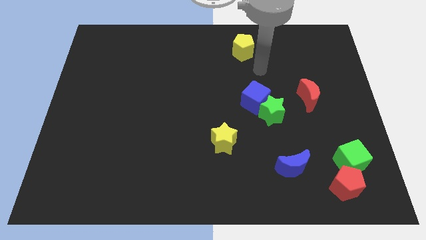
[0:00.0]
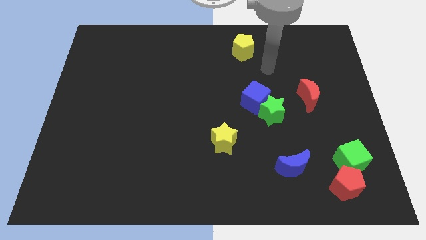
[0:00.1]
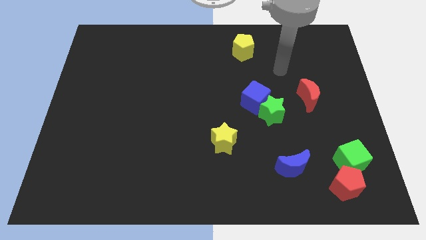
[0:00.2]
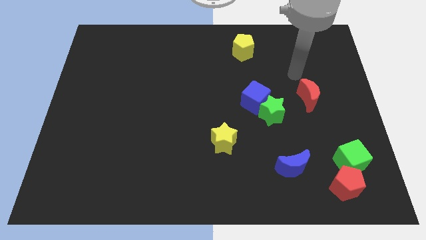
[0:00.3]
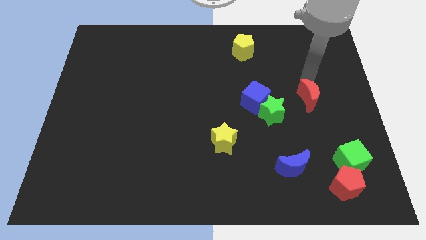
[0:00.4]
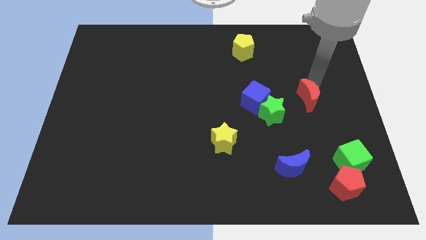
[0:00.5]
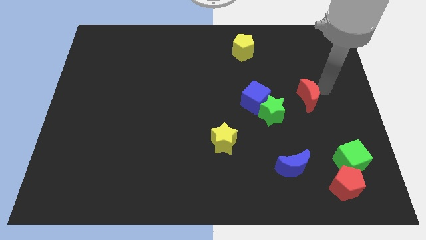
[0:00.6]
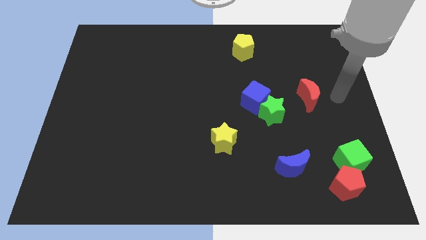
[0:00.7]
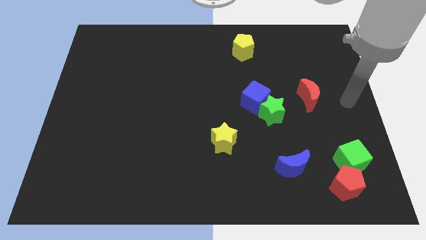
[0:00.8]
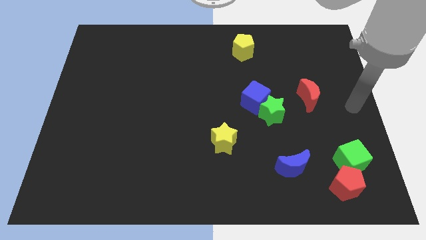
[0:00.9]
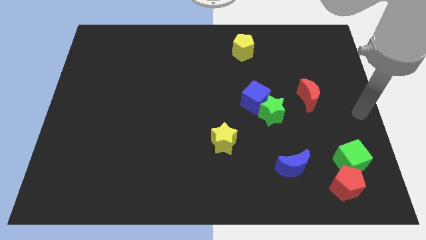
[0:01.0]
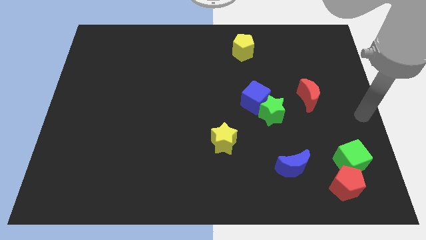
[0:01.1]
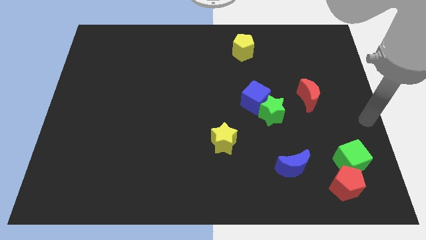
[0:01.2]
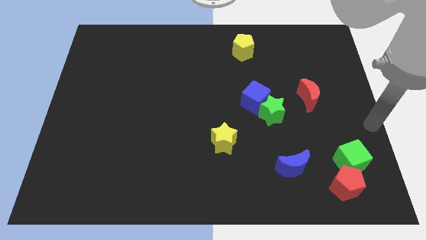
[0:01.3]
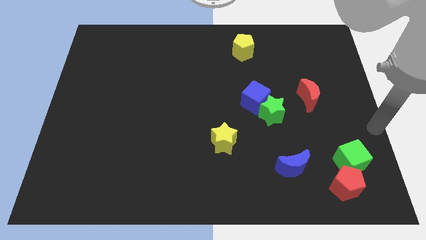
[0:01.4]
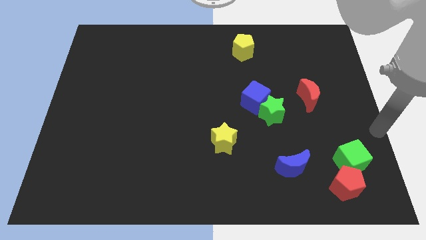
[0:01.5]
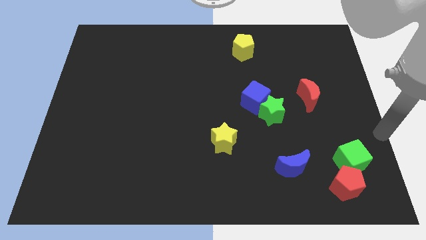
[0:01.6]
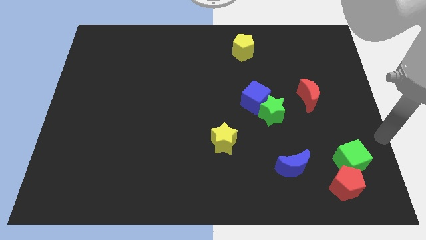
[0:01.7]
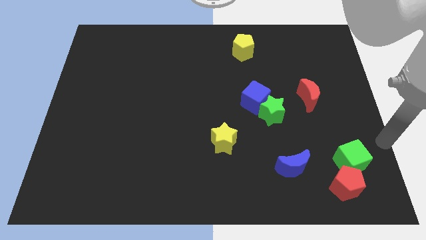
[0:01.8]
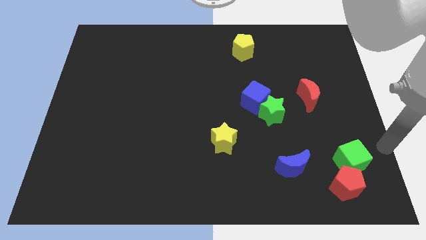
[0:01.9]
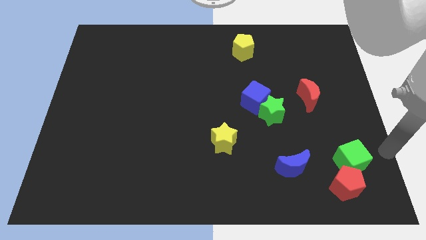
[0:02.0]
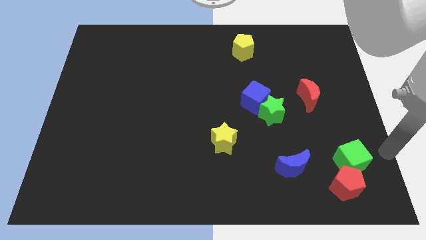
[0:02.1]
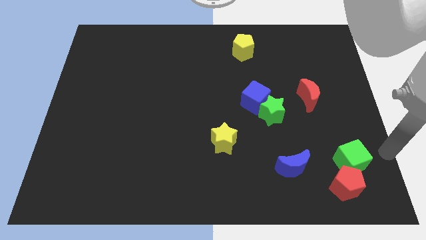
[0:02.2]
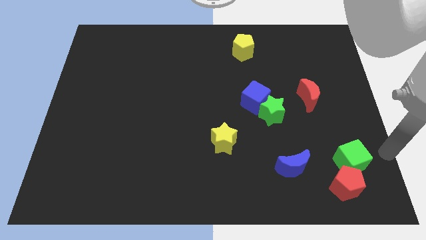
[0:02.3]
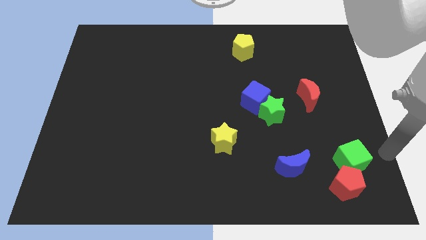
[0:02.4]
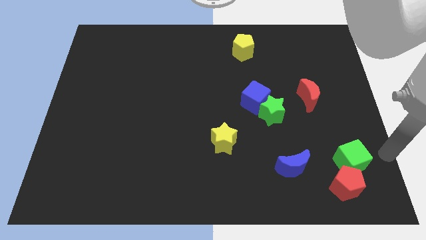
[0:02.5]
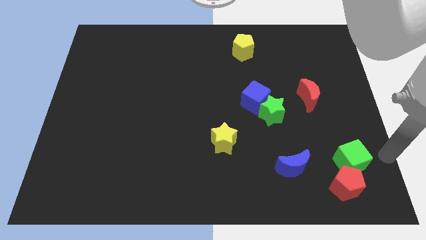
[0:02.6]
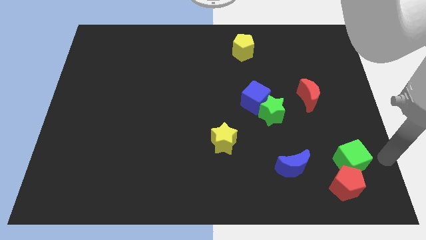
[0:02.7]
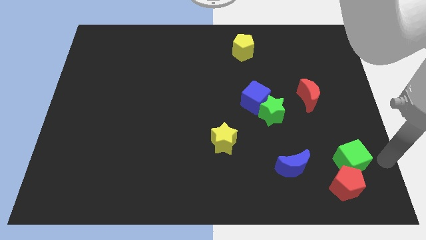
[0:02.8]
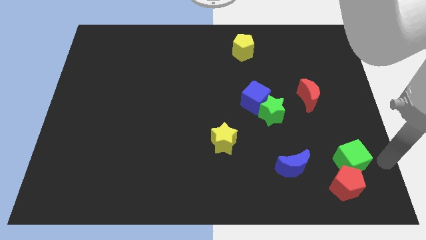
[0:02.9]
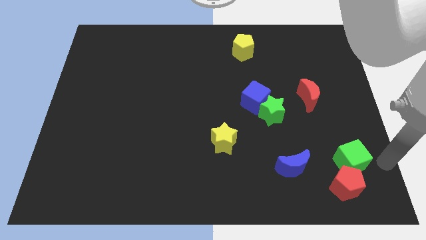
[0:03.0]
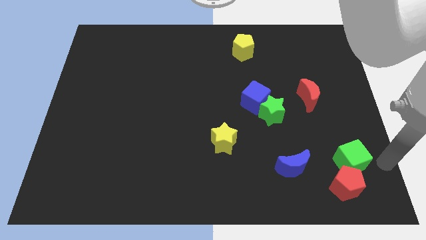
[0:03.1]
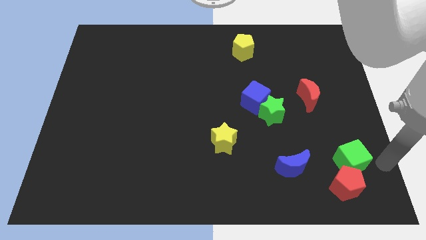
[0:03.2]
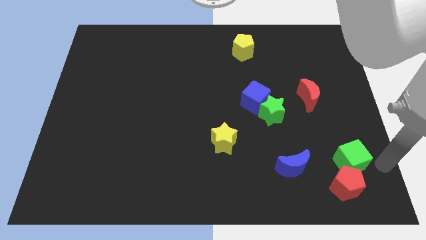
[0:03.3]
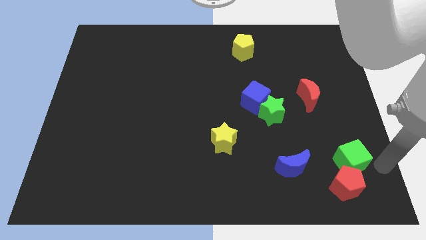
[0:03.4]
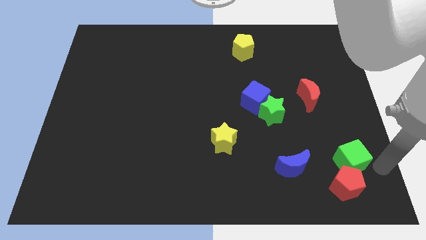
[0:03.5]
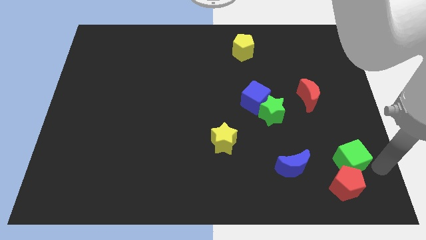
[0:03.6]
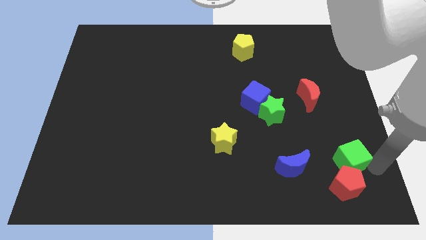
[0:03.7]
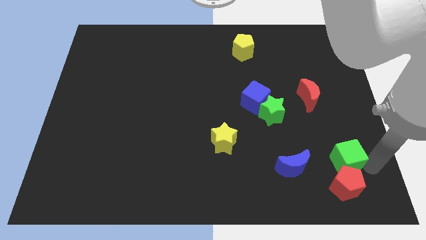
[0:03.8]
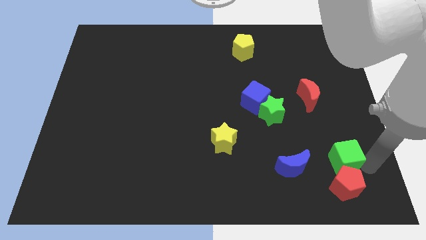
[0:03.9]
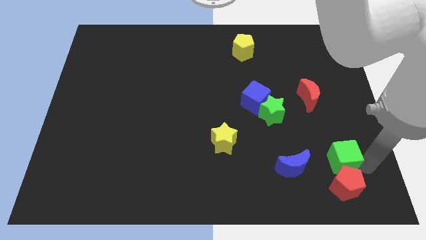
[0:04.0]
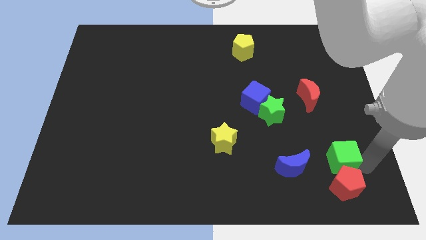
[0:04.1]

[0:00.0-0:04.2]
move green cube towards blue crescent

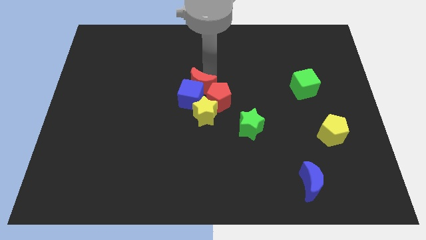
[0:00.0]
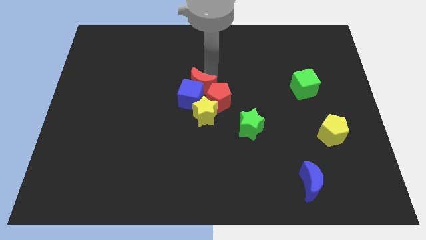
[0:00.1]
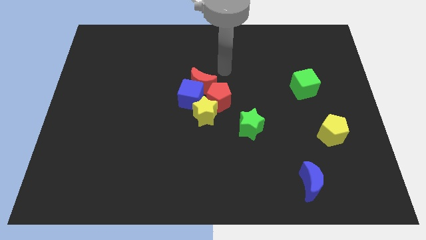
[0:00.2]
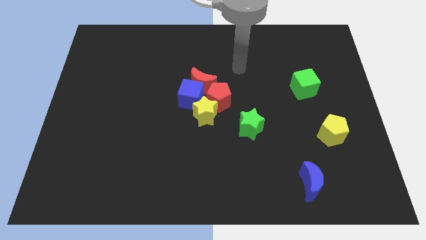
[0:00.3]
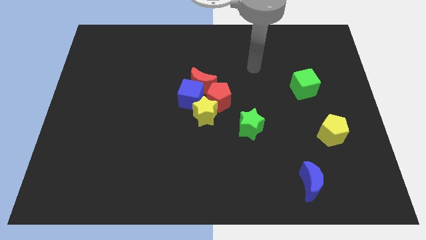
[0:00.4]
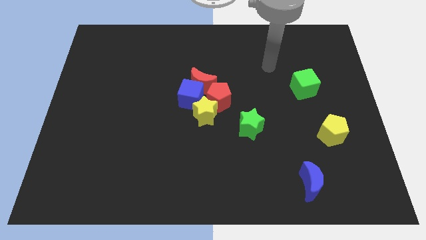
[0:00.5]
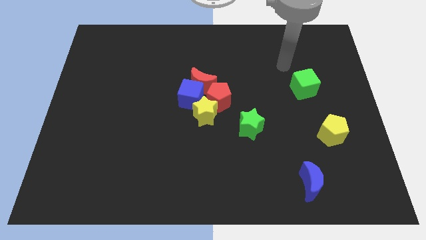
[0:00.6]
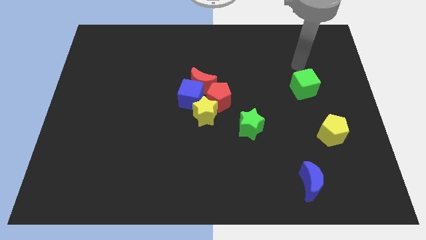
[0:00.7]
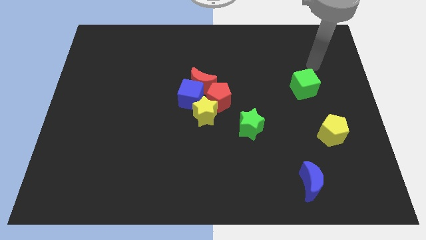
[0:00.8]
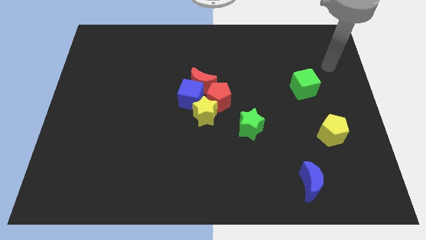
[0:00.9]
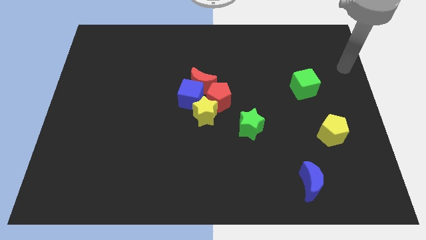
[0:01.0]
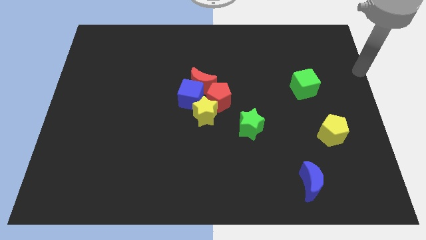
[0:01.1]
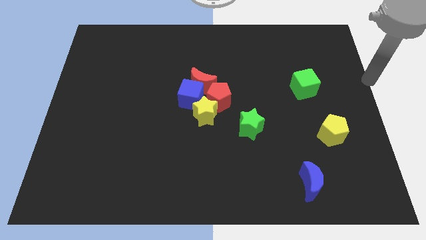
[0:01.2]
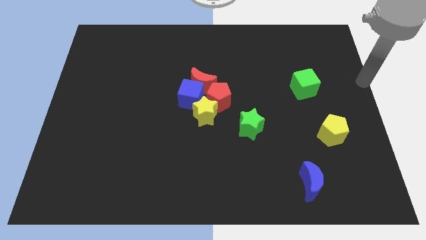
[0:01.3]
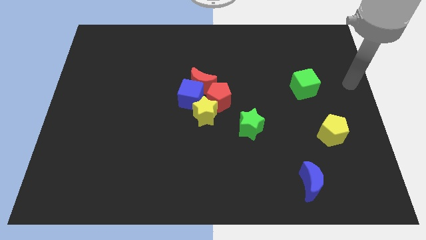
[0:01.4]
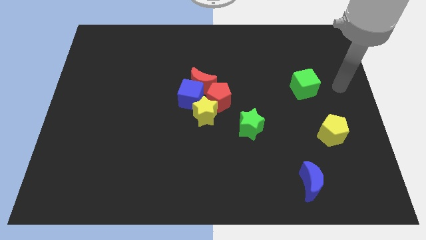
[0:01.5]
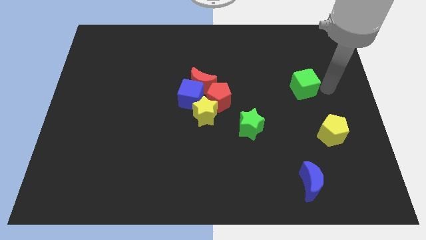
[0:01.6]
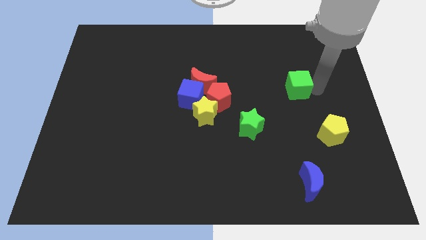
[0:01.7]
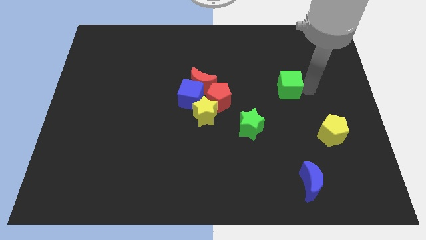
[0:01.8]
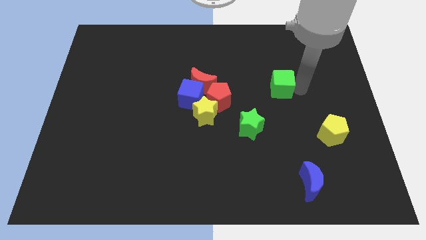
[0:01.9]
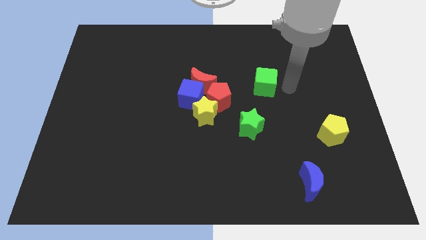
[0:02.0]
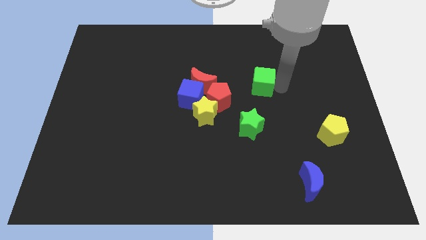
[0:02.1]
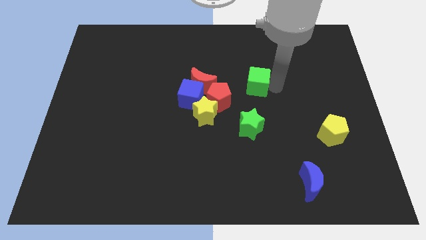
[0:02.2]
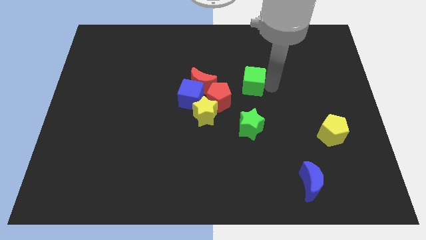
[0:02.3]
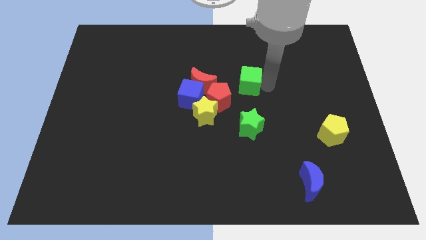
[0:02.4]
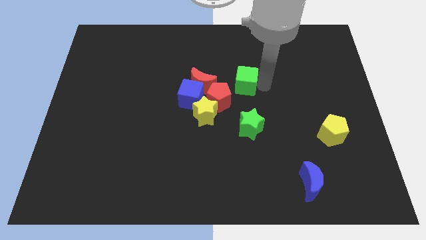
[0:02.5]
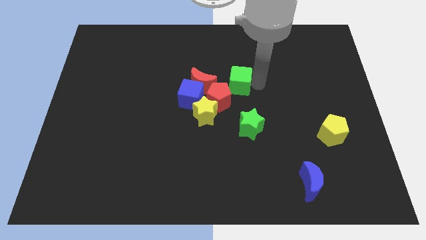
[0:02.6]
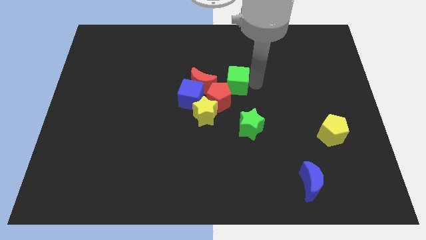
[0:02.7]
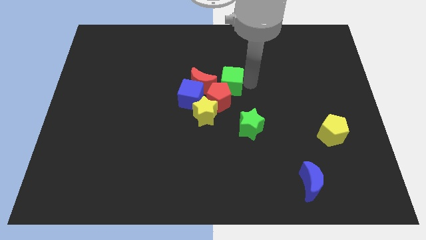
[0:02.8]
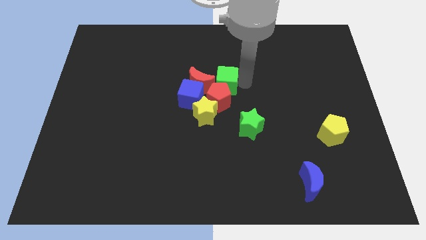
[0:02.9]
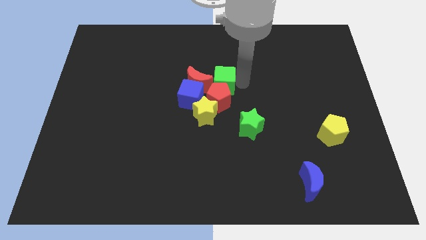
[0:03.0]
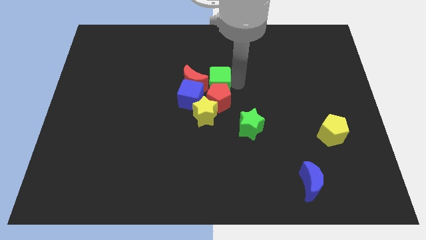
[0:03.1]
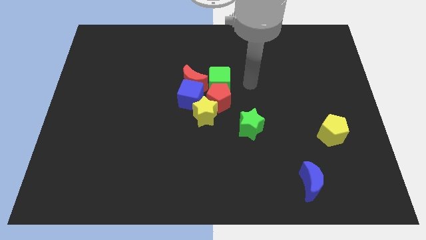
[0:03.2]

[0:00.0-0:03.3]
move the arm away from the red moon

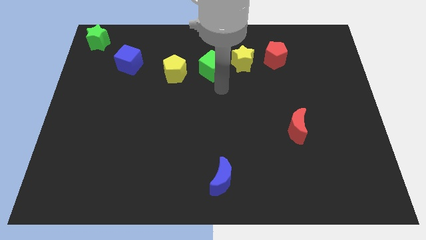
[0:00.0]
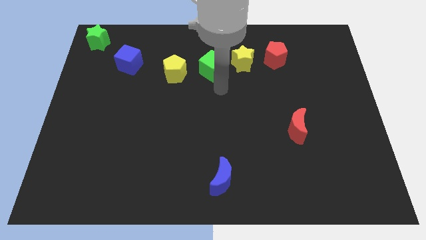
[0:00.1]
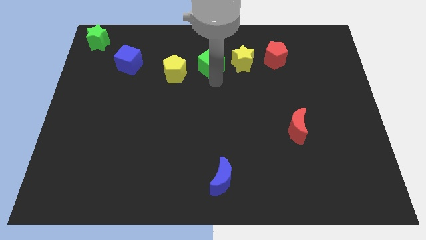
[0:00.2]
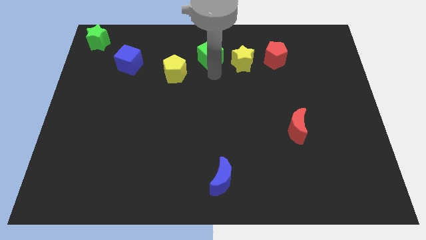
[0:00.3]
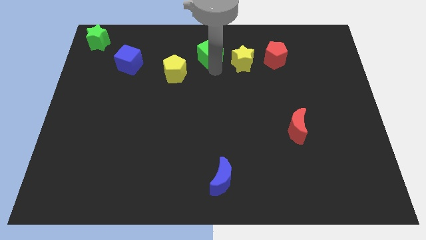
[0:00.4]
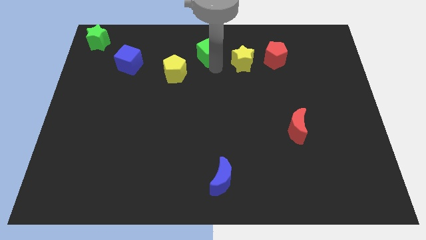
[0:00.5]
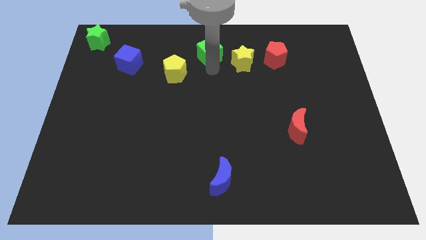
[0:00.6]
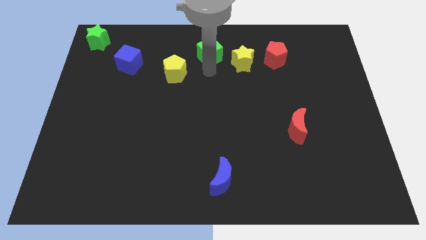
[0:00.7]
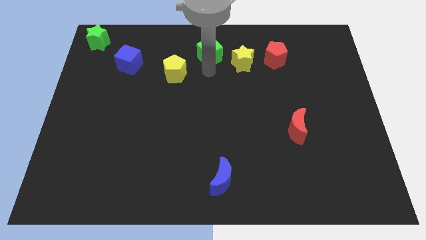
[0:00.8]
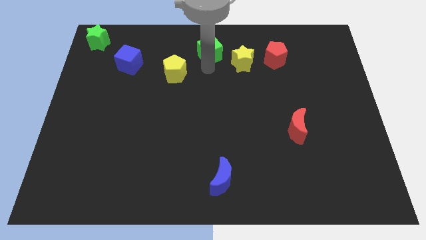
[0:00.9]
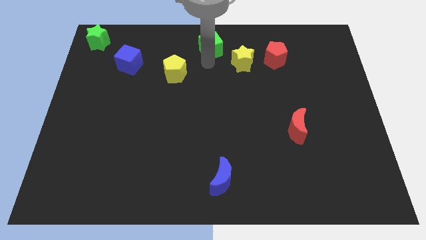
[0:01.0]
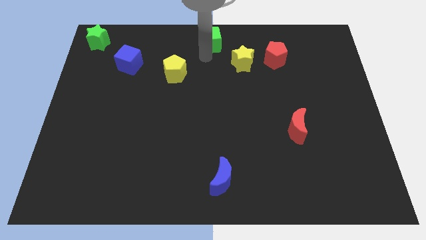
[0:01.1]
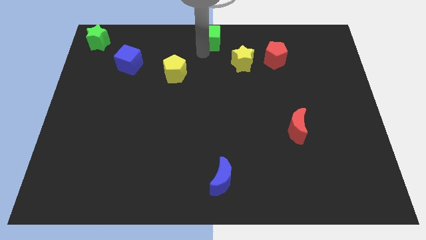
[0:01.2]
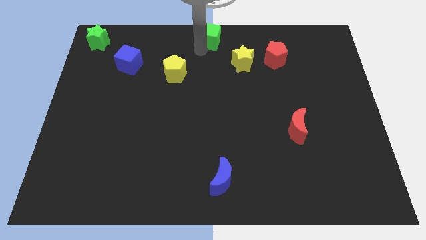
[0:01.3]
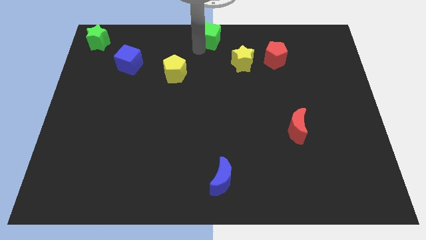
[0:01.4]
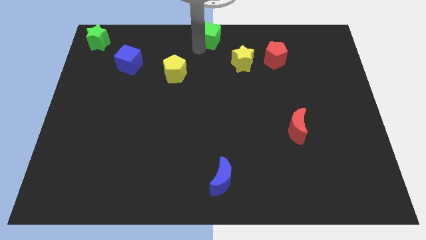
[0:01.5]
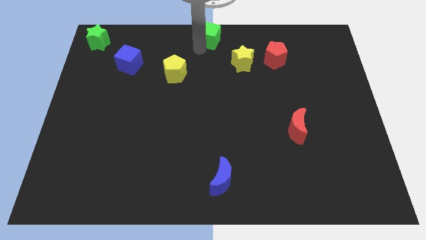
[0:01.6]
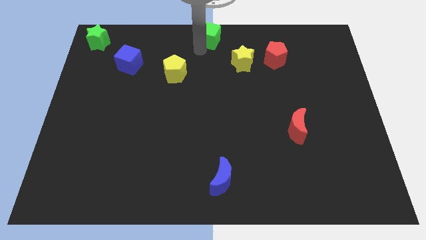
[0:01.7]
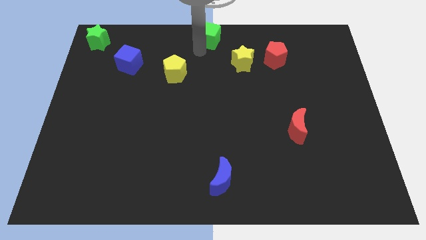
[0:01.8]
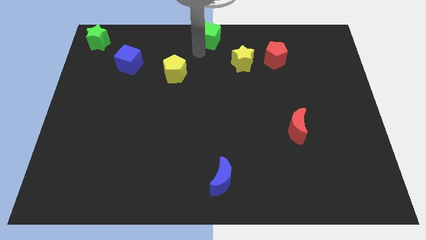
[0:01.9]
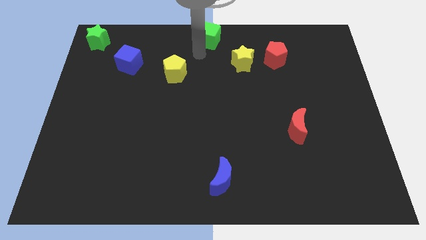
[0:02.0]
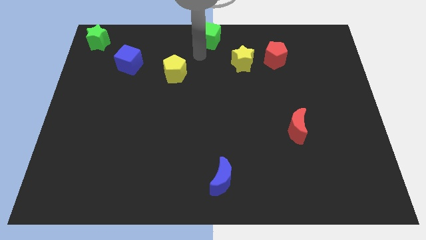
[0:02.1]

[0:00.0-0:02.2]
move the green cube to the top center
